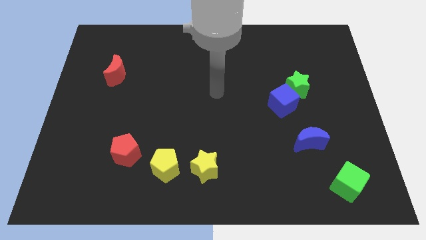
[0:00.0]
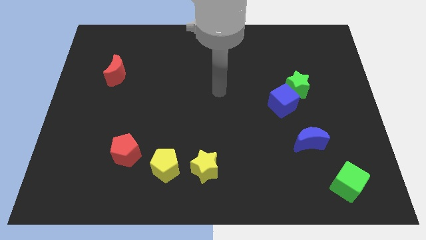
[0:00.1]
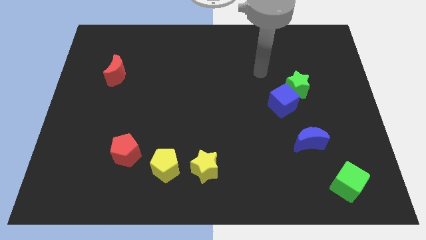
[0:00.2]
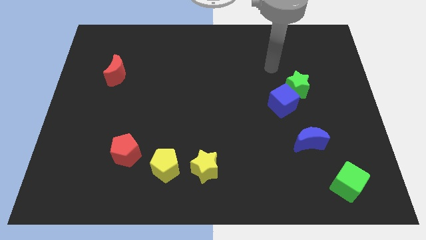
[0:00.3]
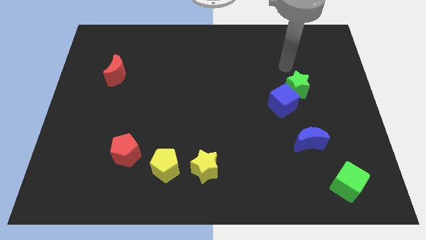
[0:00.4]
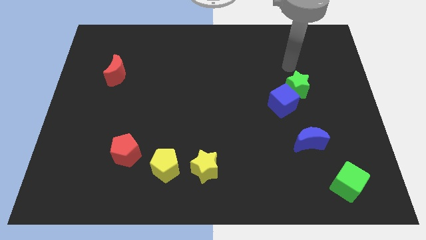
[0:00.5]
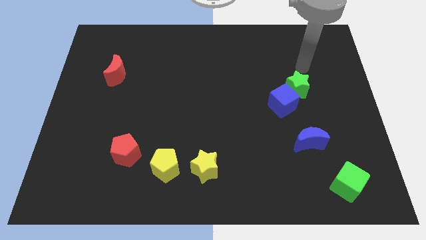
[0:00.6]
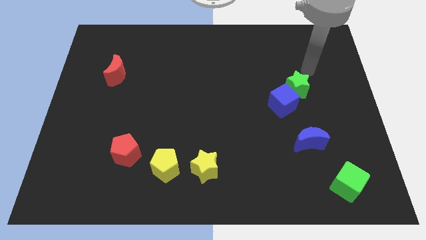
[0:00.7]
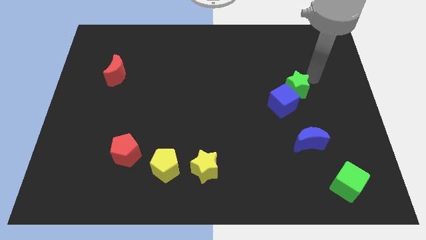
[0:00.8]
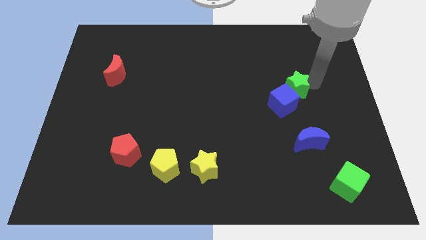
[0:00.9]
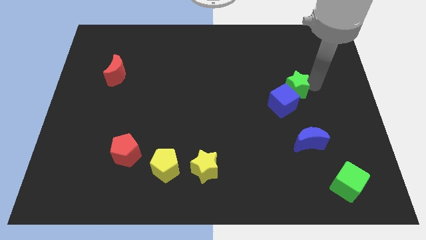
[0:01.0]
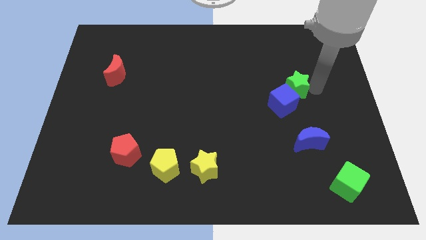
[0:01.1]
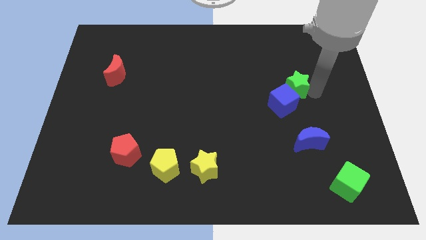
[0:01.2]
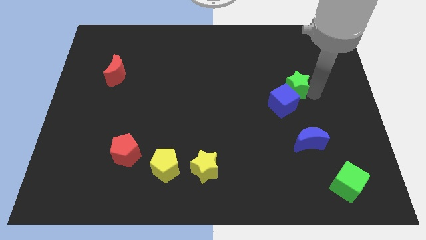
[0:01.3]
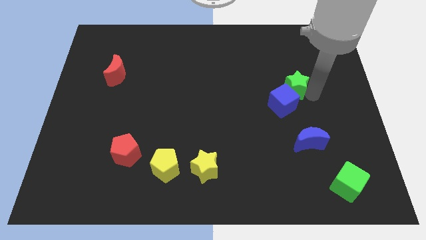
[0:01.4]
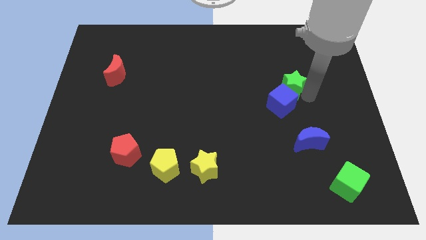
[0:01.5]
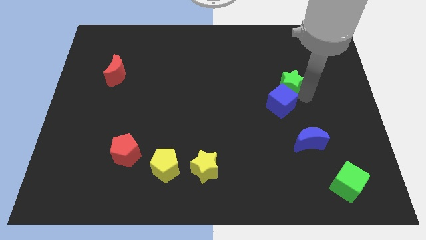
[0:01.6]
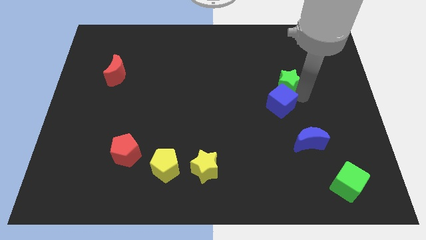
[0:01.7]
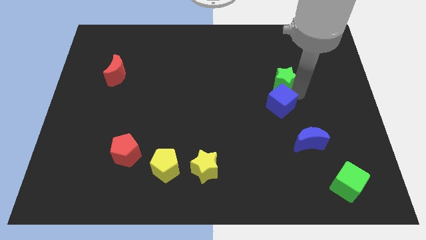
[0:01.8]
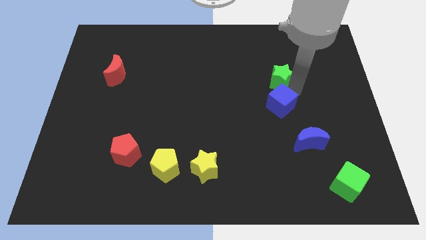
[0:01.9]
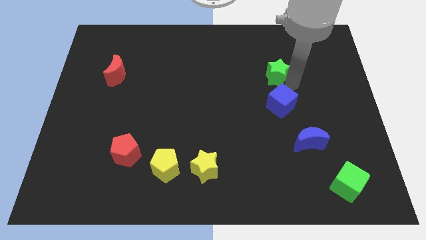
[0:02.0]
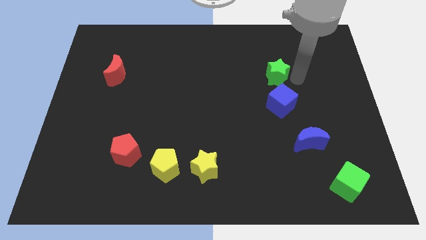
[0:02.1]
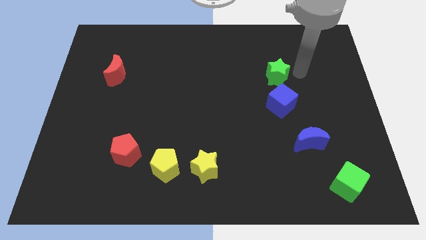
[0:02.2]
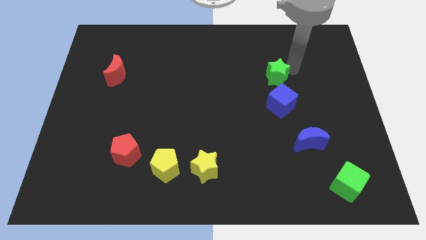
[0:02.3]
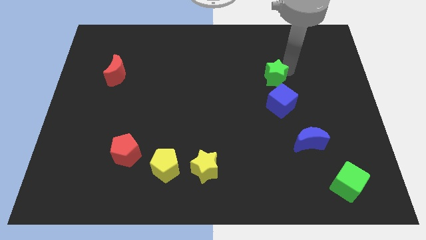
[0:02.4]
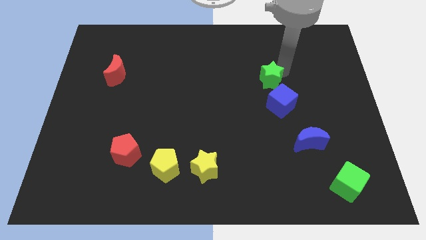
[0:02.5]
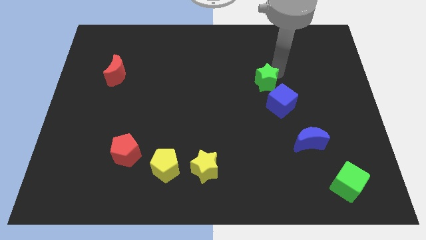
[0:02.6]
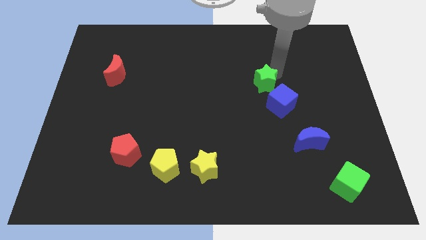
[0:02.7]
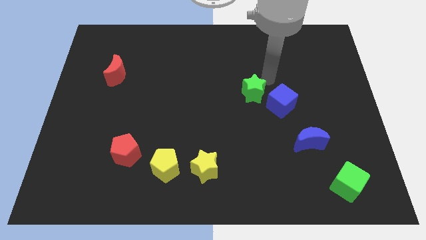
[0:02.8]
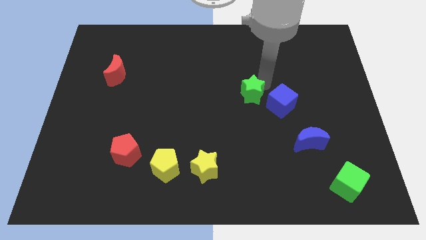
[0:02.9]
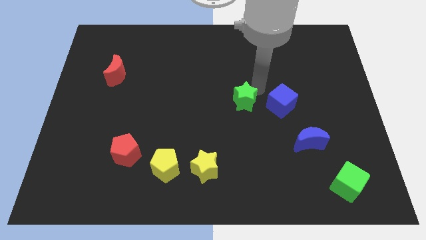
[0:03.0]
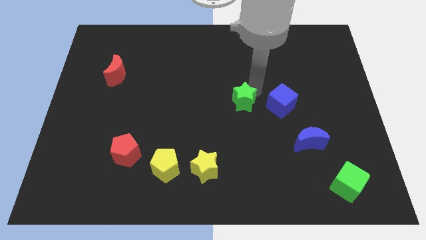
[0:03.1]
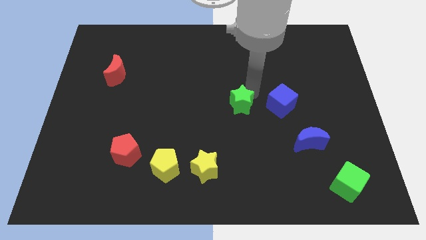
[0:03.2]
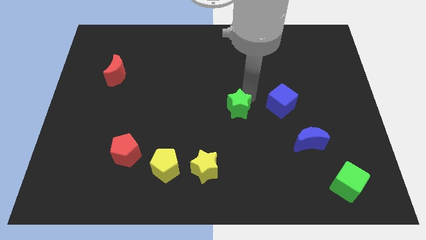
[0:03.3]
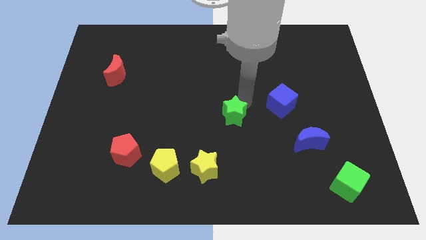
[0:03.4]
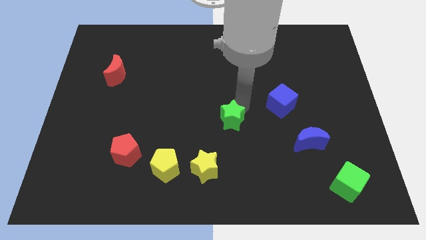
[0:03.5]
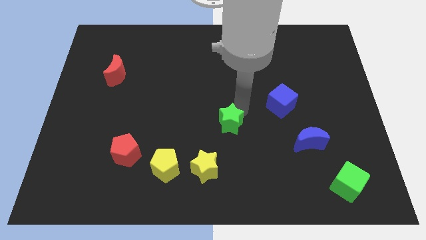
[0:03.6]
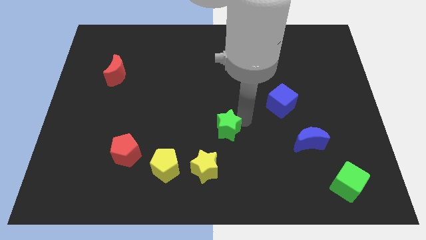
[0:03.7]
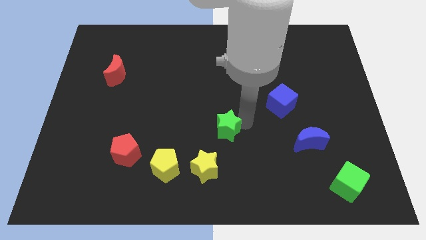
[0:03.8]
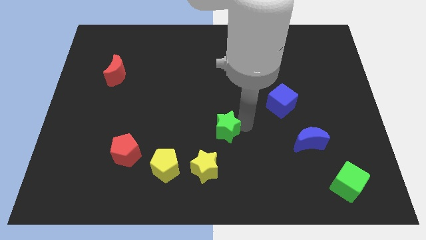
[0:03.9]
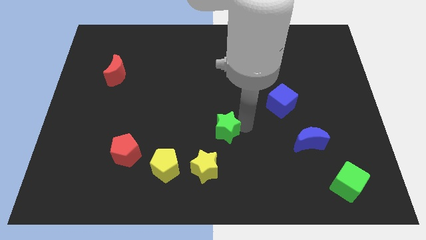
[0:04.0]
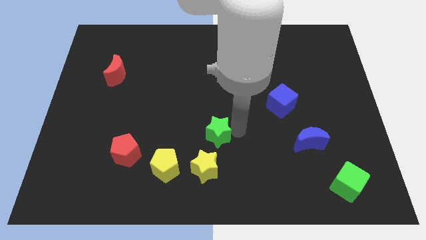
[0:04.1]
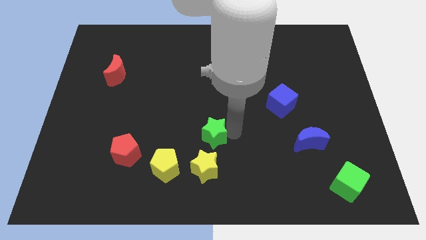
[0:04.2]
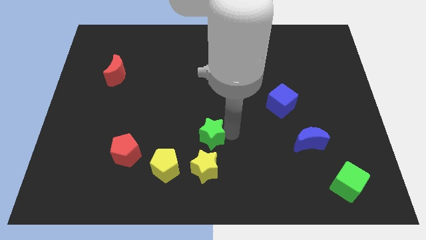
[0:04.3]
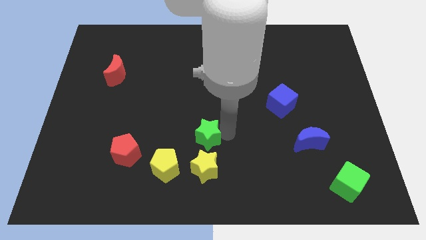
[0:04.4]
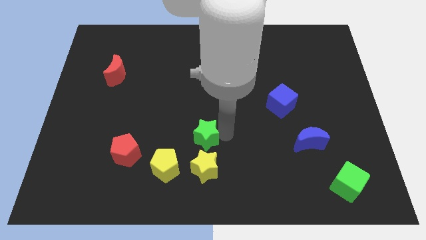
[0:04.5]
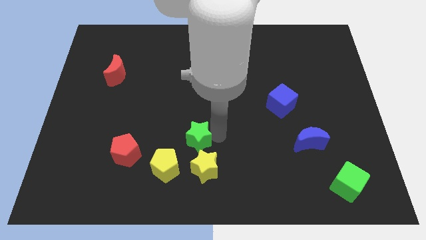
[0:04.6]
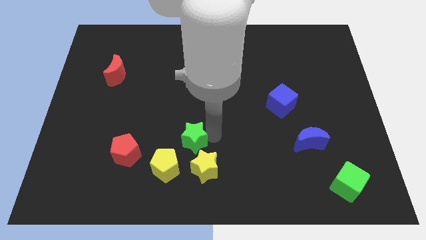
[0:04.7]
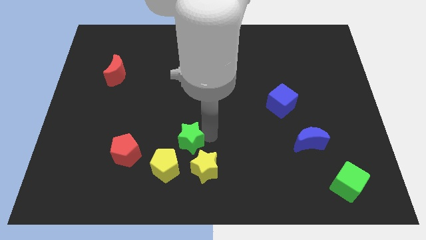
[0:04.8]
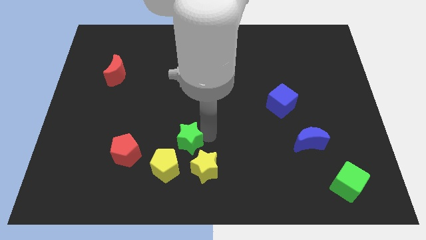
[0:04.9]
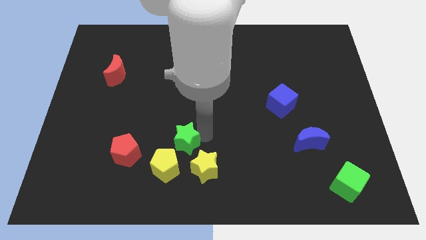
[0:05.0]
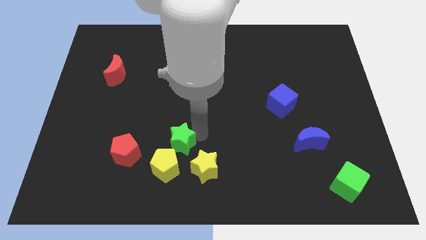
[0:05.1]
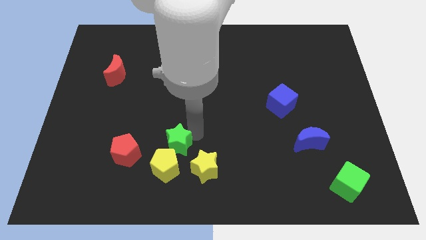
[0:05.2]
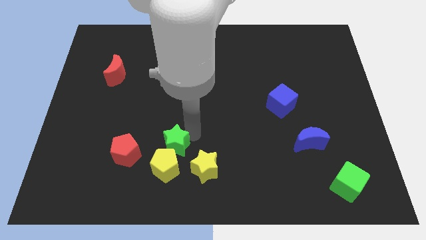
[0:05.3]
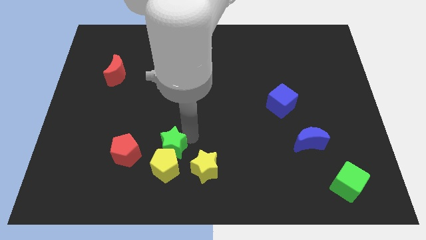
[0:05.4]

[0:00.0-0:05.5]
push the green star towards the yellow pentagon

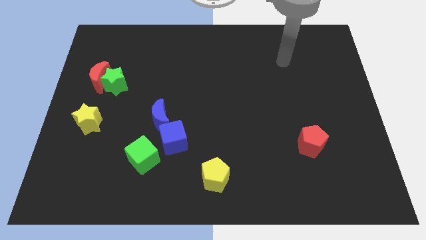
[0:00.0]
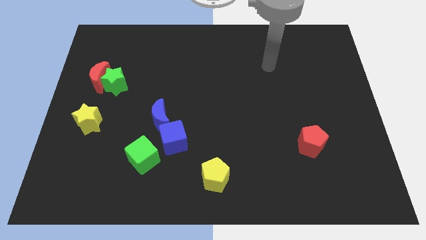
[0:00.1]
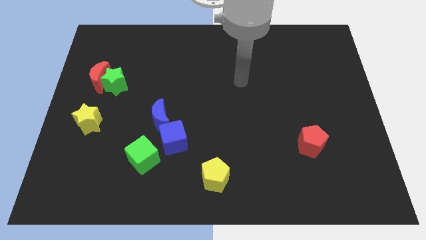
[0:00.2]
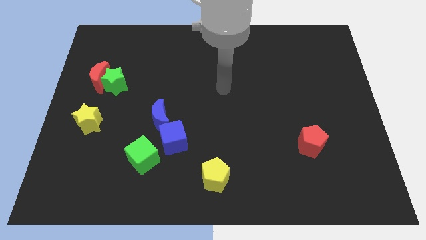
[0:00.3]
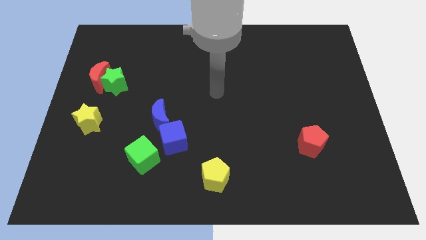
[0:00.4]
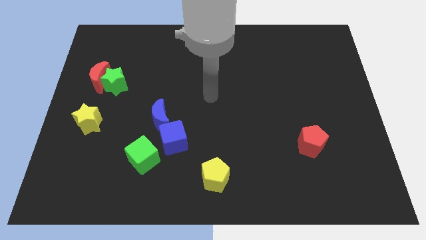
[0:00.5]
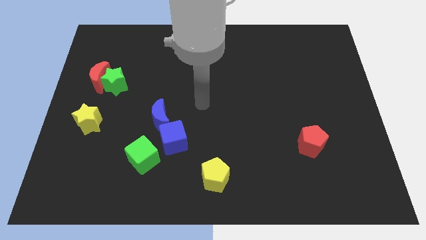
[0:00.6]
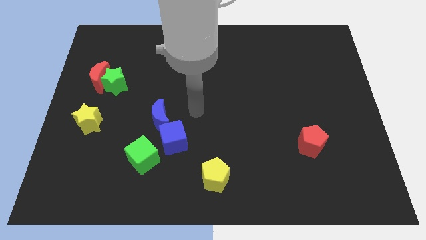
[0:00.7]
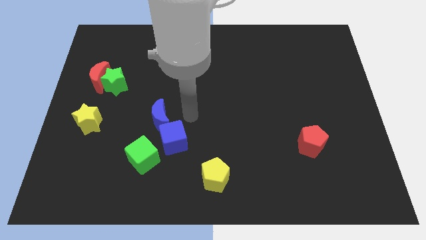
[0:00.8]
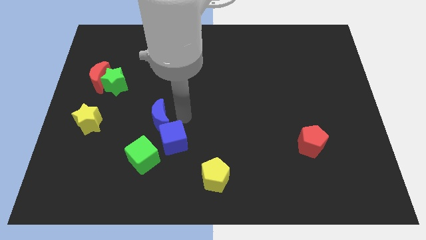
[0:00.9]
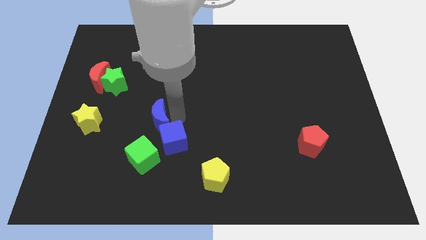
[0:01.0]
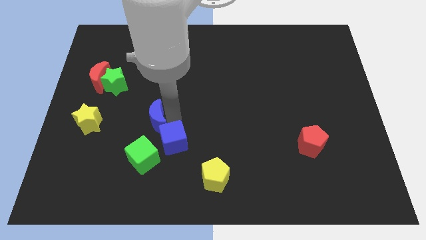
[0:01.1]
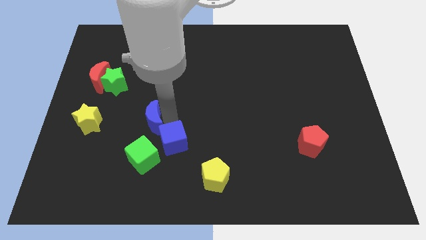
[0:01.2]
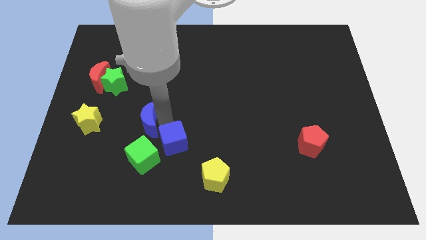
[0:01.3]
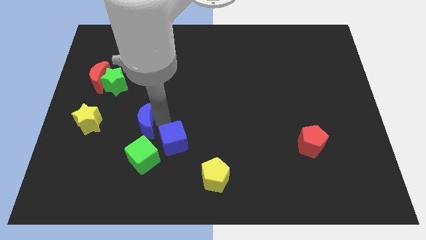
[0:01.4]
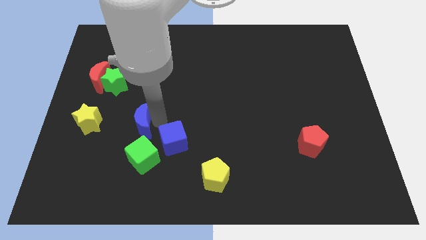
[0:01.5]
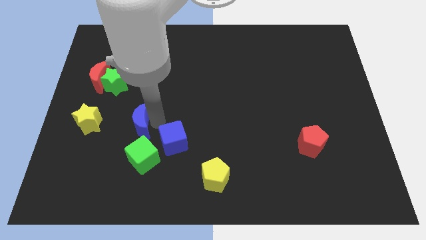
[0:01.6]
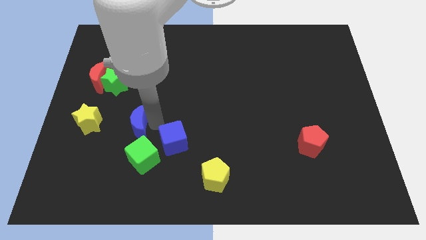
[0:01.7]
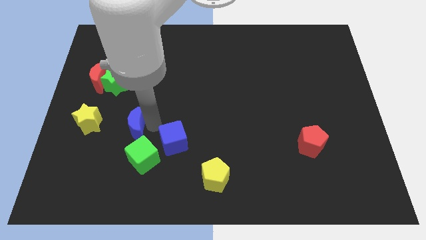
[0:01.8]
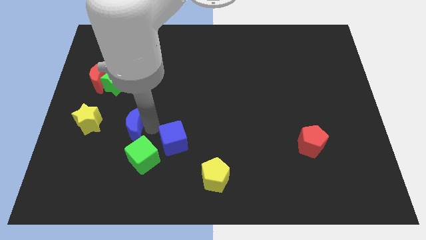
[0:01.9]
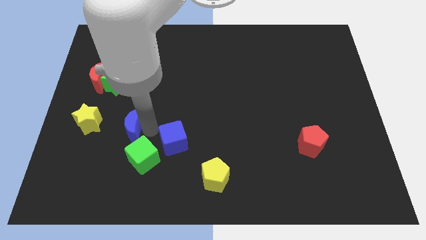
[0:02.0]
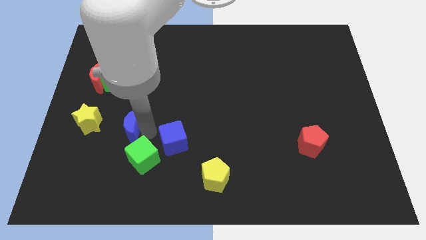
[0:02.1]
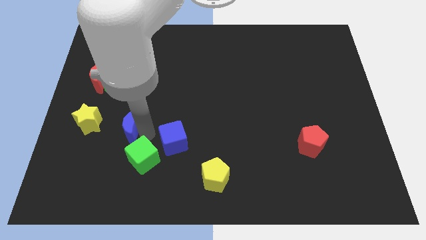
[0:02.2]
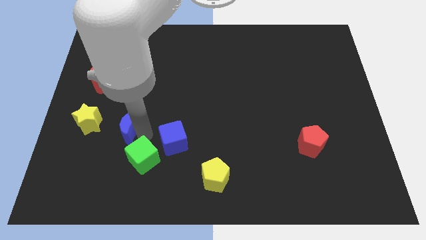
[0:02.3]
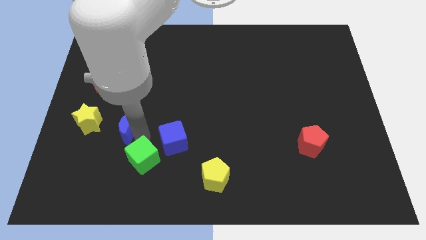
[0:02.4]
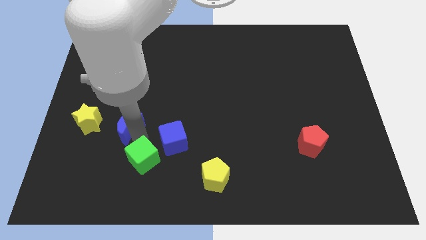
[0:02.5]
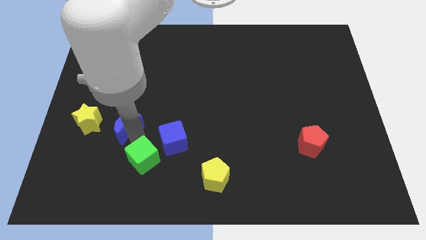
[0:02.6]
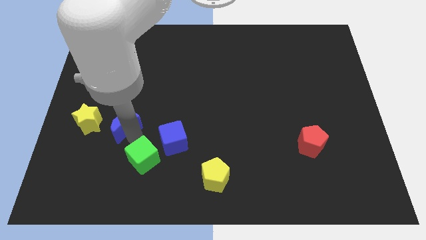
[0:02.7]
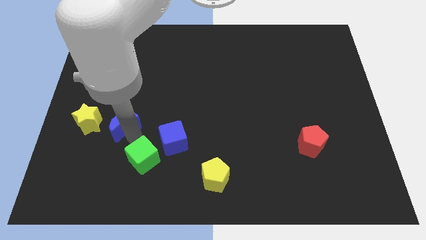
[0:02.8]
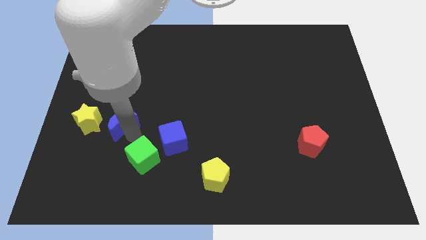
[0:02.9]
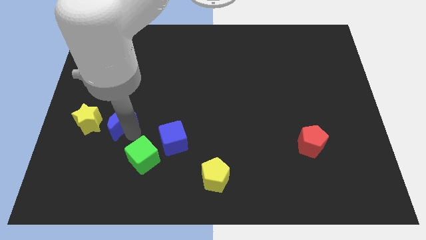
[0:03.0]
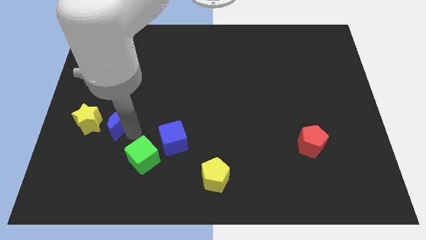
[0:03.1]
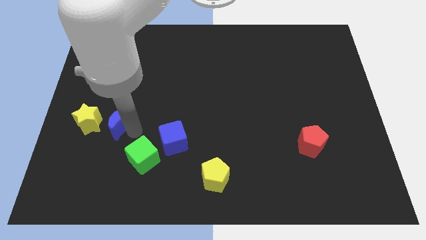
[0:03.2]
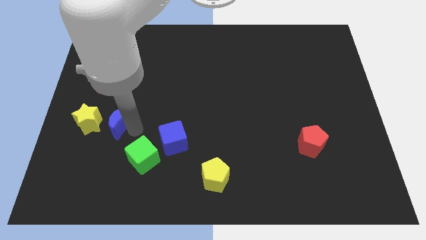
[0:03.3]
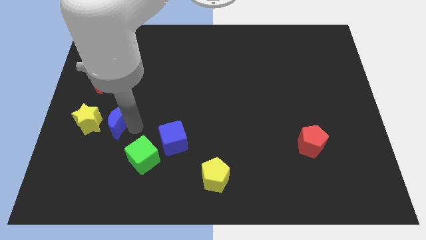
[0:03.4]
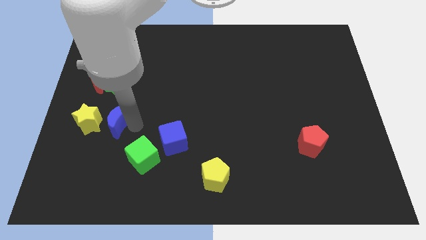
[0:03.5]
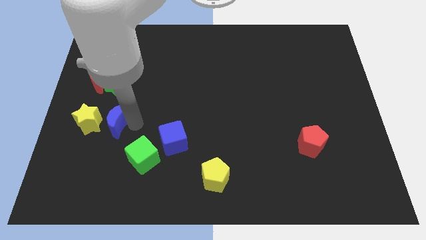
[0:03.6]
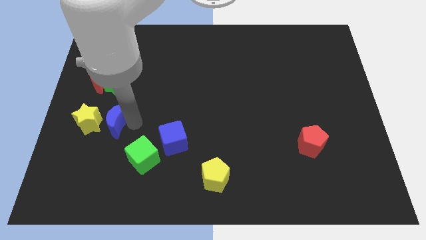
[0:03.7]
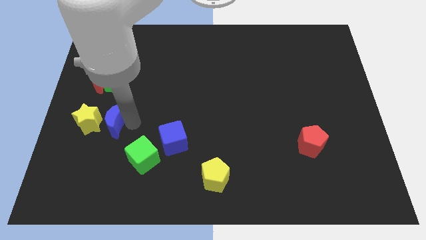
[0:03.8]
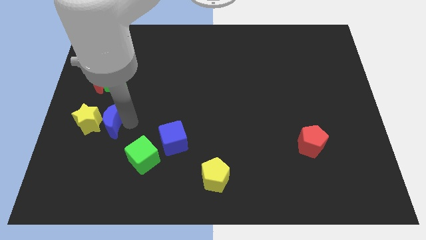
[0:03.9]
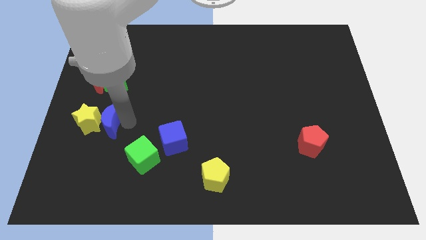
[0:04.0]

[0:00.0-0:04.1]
move the blue moon towards the yellow star
